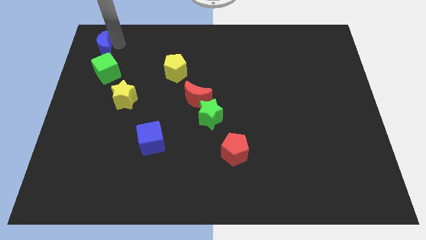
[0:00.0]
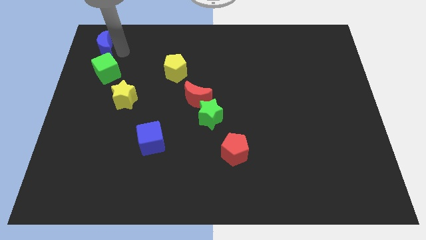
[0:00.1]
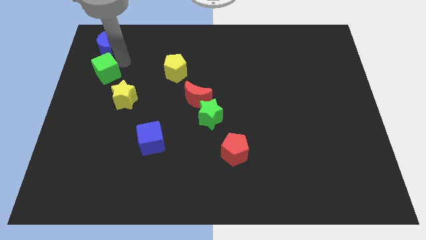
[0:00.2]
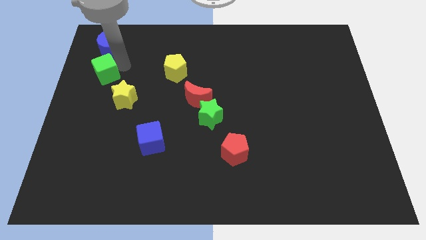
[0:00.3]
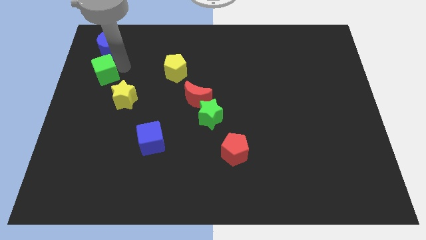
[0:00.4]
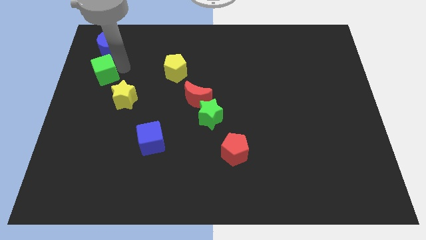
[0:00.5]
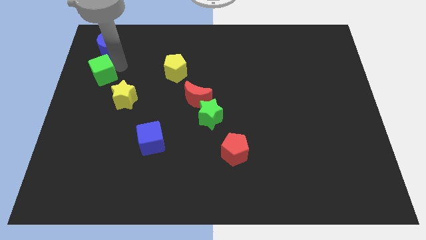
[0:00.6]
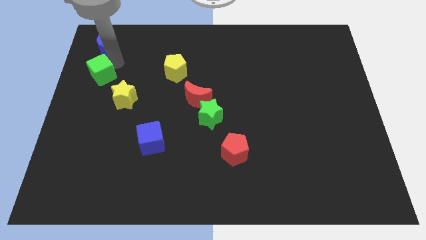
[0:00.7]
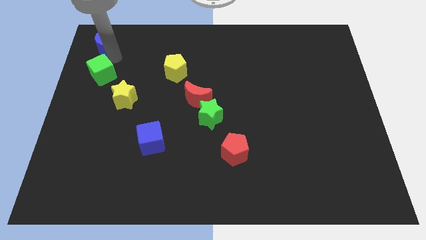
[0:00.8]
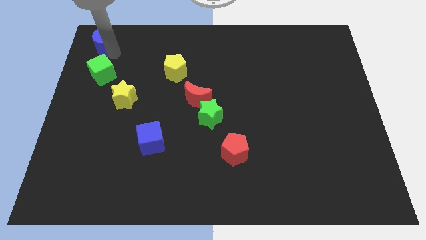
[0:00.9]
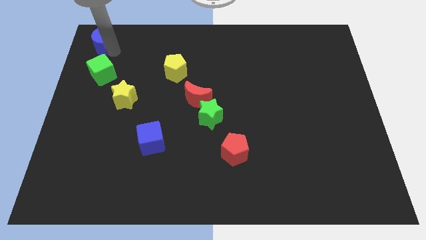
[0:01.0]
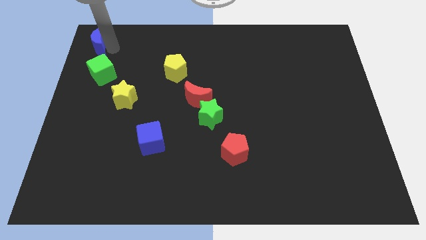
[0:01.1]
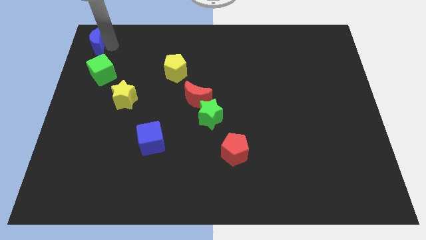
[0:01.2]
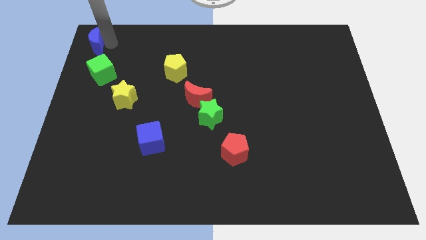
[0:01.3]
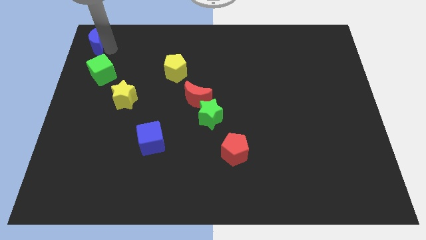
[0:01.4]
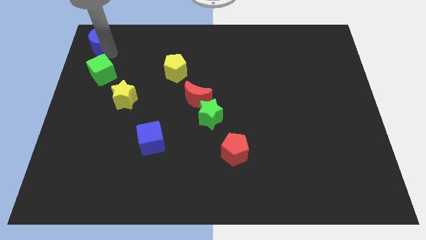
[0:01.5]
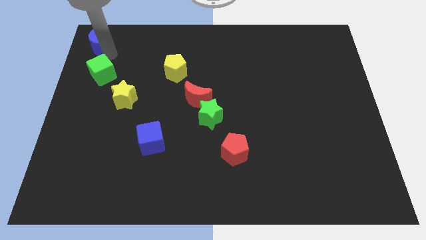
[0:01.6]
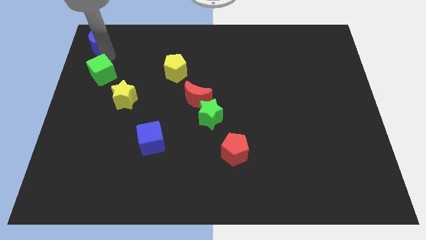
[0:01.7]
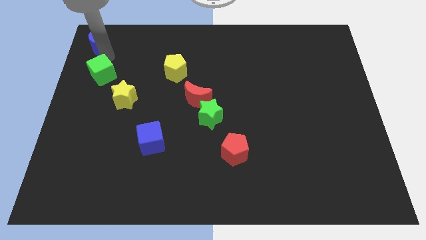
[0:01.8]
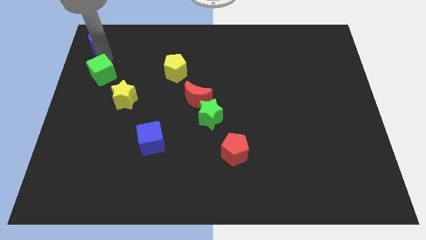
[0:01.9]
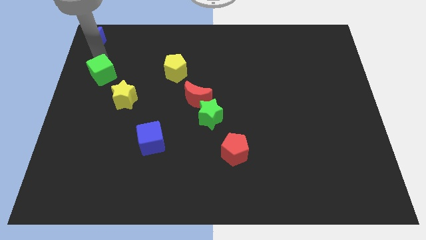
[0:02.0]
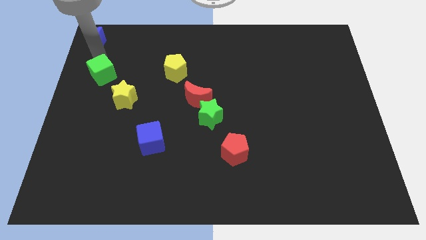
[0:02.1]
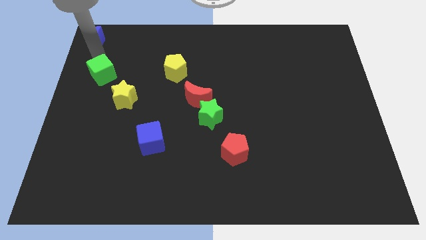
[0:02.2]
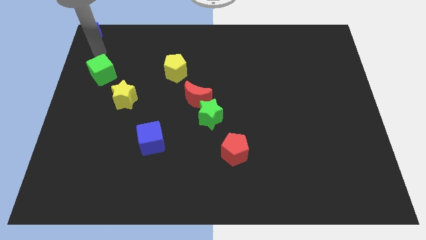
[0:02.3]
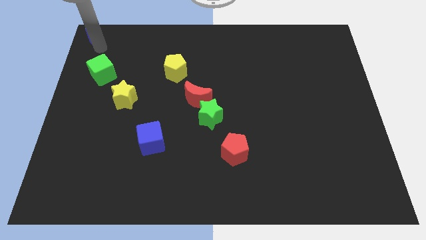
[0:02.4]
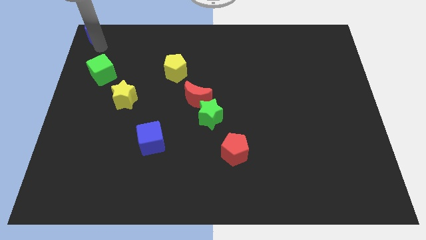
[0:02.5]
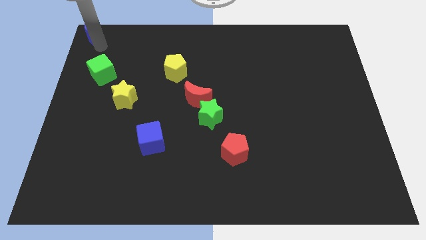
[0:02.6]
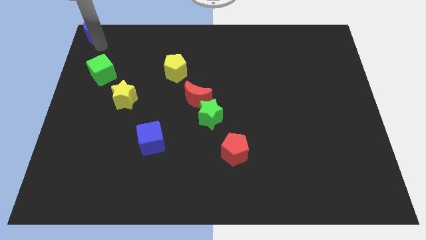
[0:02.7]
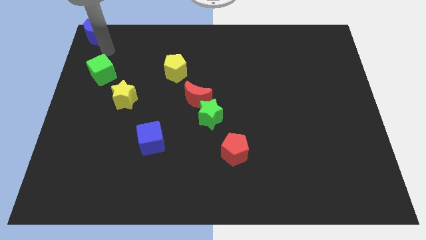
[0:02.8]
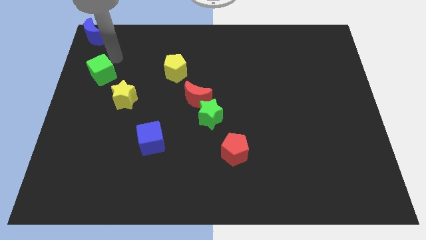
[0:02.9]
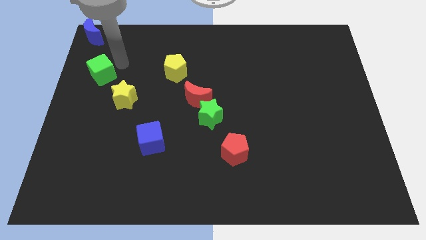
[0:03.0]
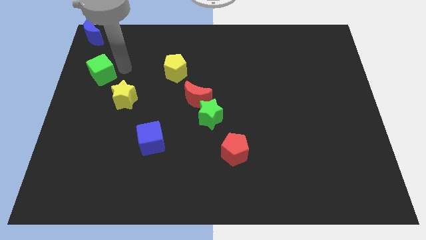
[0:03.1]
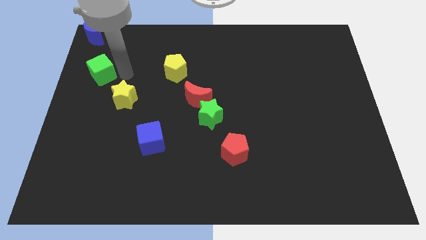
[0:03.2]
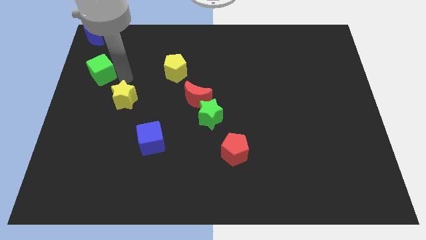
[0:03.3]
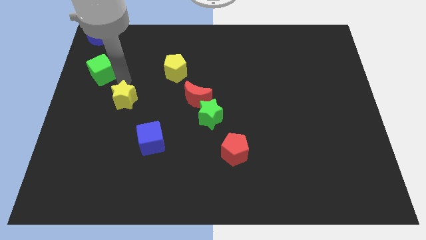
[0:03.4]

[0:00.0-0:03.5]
place the blue crescent at the top left corner of the board

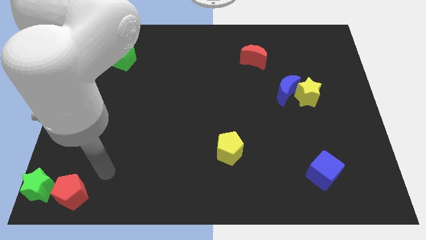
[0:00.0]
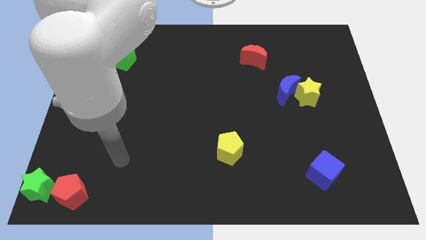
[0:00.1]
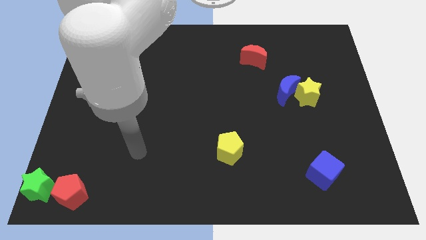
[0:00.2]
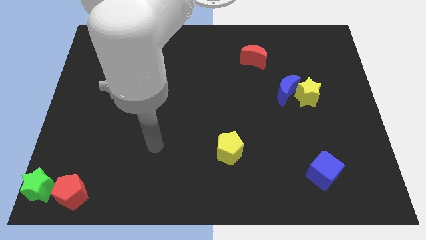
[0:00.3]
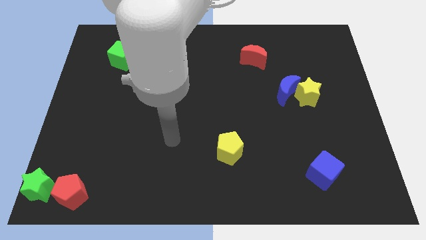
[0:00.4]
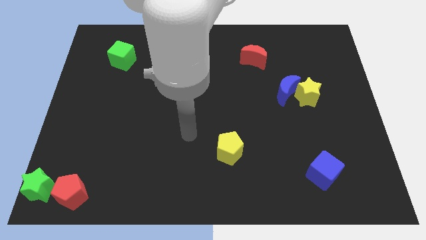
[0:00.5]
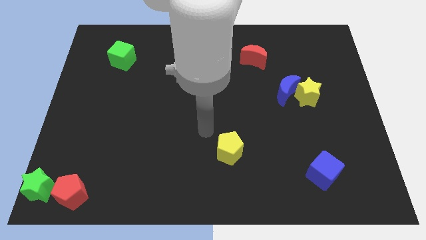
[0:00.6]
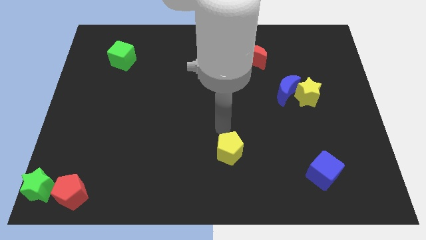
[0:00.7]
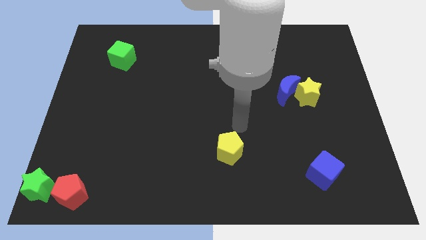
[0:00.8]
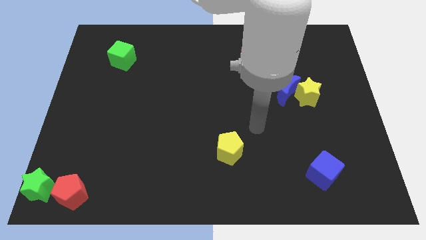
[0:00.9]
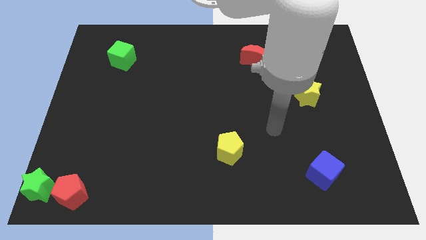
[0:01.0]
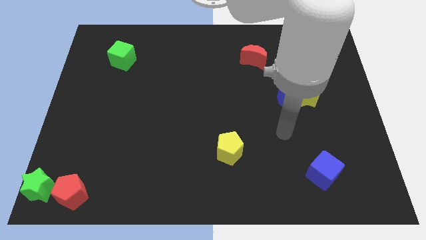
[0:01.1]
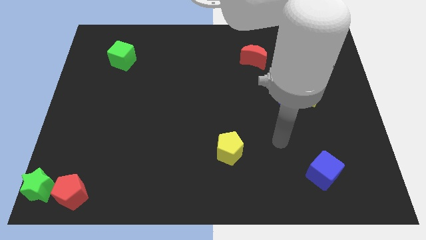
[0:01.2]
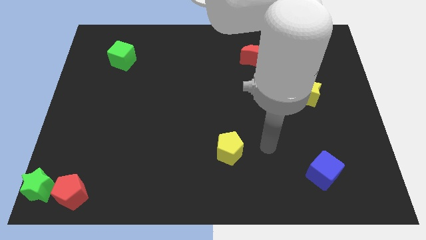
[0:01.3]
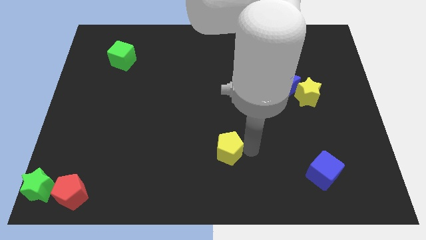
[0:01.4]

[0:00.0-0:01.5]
place your hand at right side of the yellow pentagon

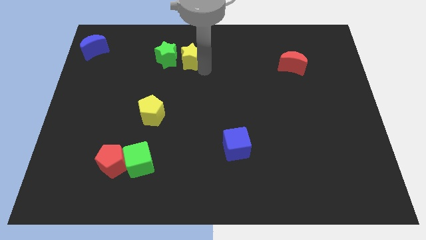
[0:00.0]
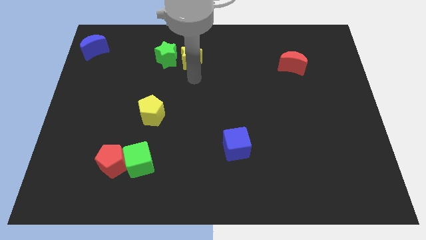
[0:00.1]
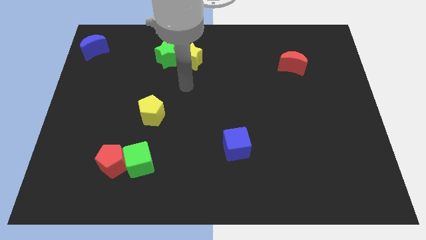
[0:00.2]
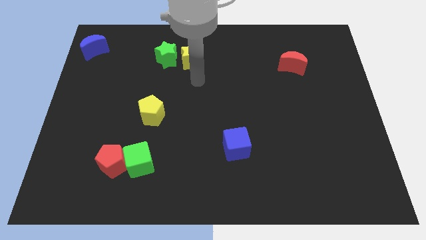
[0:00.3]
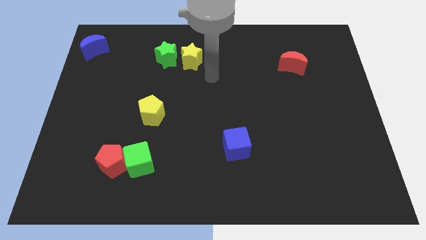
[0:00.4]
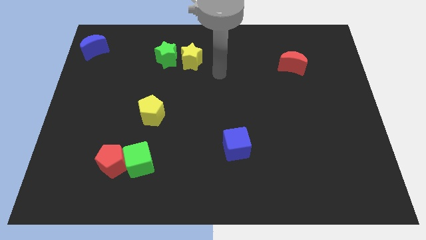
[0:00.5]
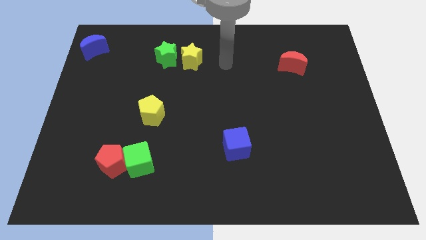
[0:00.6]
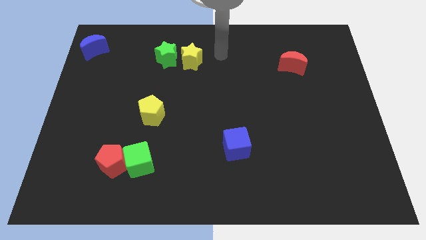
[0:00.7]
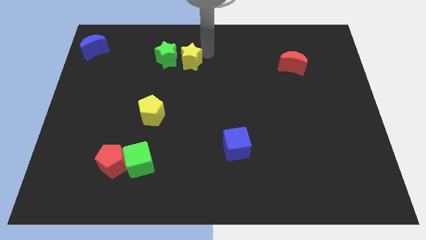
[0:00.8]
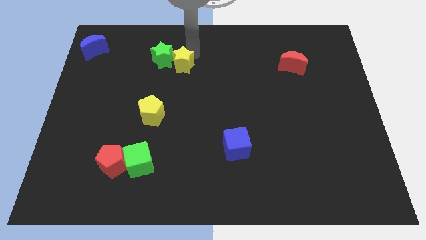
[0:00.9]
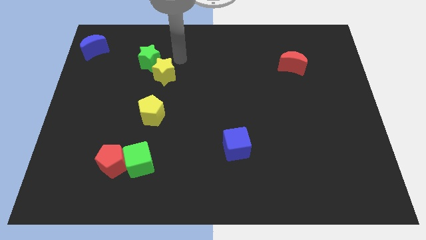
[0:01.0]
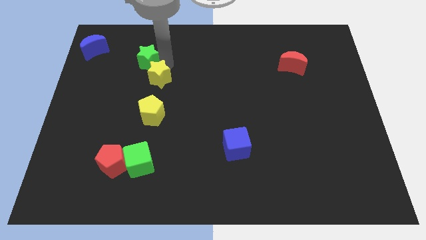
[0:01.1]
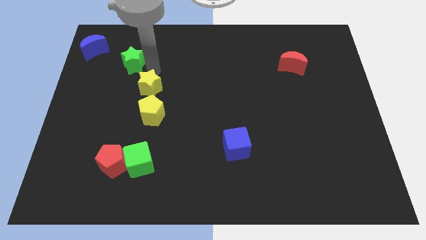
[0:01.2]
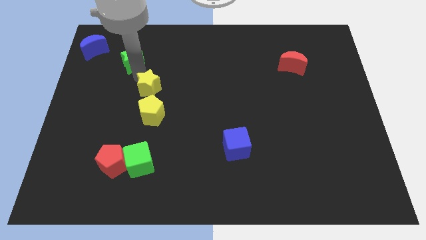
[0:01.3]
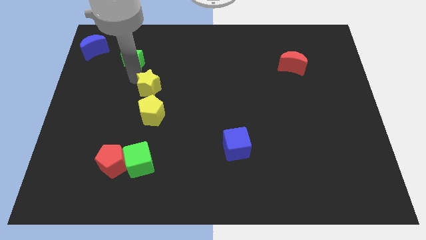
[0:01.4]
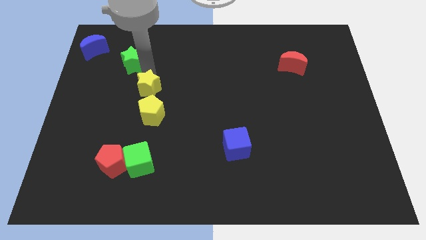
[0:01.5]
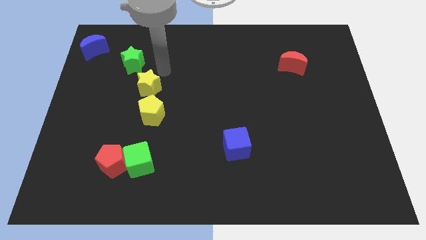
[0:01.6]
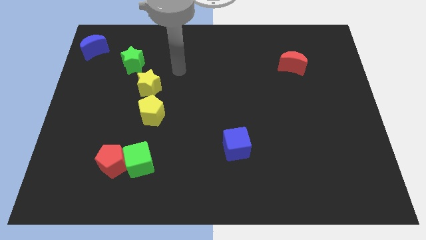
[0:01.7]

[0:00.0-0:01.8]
move the yellow star in between the green star and yellow pentagon

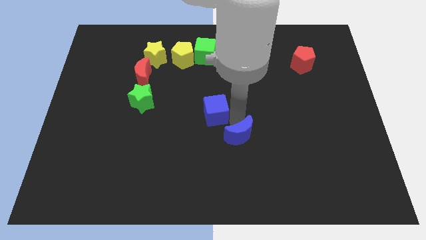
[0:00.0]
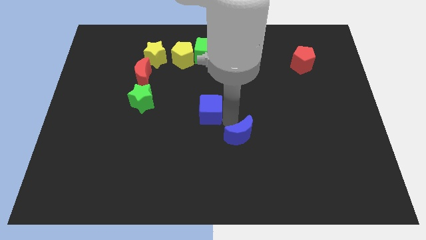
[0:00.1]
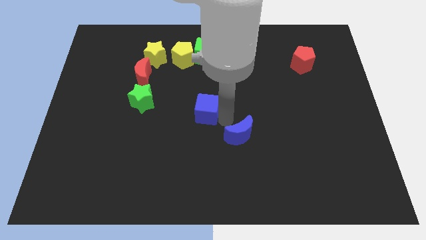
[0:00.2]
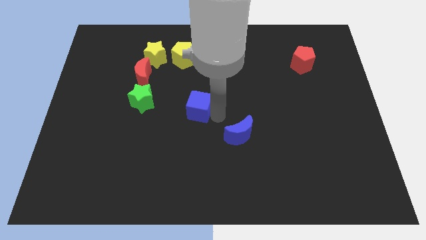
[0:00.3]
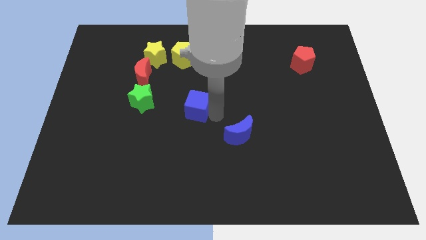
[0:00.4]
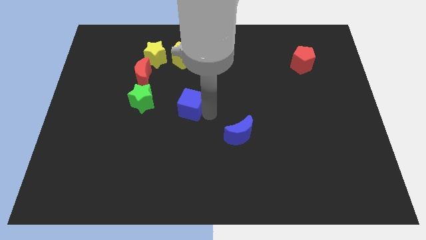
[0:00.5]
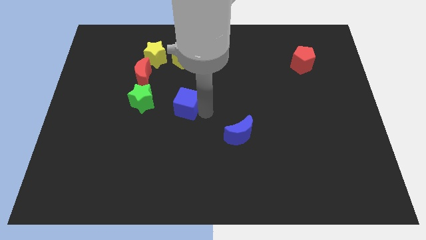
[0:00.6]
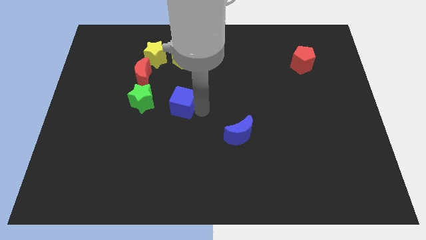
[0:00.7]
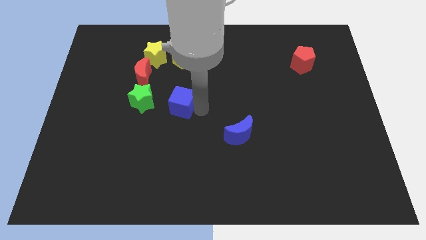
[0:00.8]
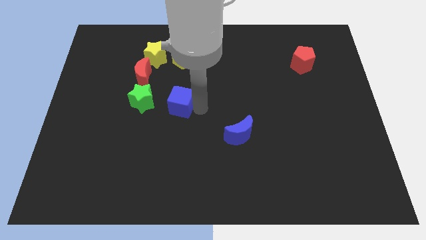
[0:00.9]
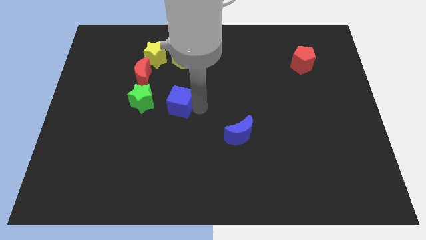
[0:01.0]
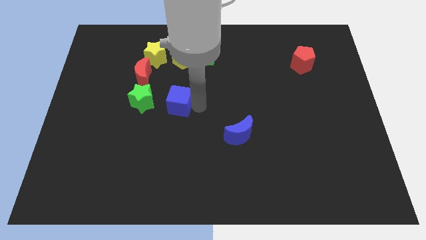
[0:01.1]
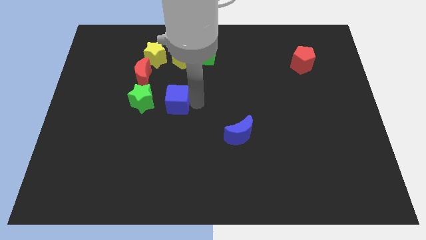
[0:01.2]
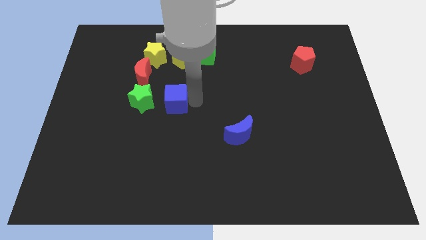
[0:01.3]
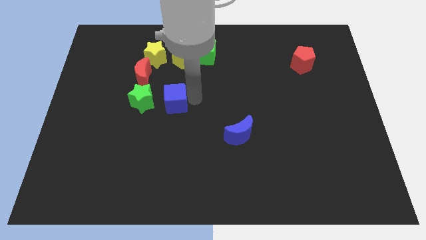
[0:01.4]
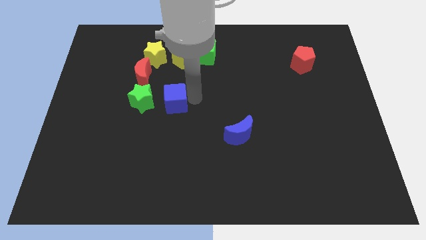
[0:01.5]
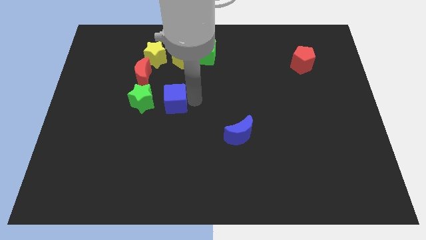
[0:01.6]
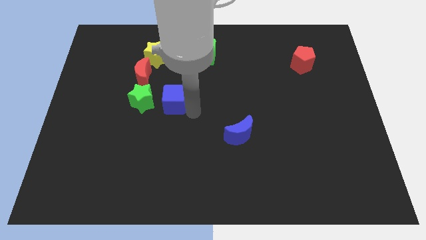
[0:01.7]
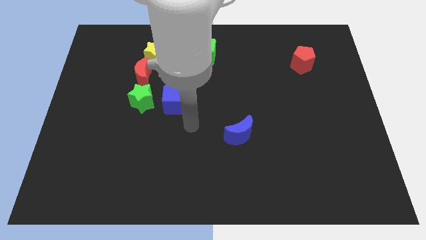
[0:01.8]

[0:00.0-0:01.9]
move the blue cube right to the green star

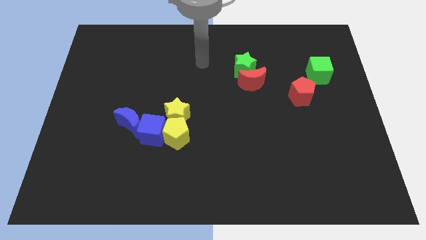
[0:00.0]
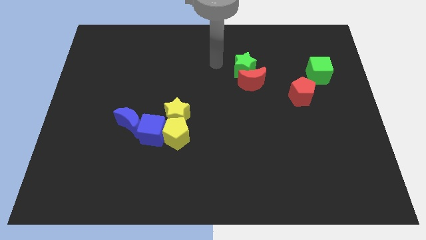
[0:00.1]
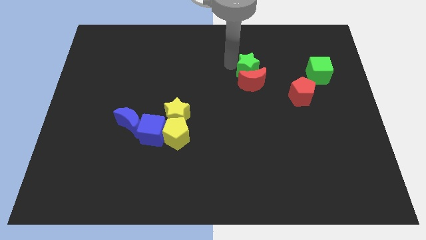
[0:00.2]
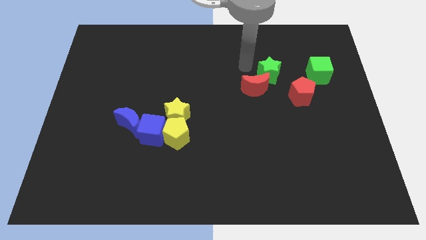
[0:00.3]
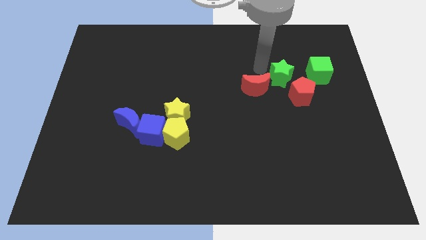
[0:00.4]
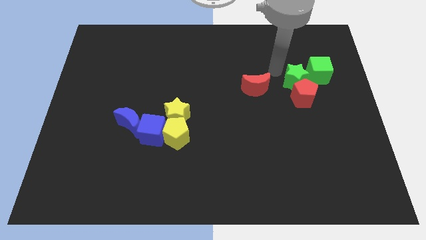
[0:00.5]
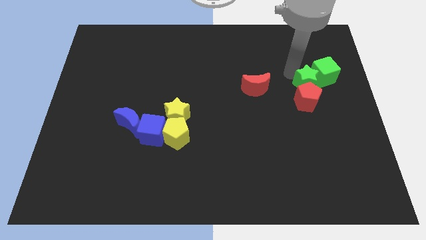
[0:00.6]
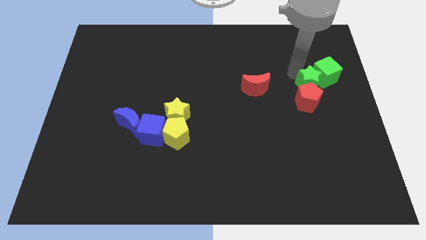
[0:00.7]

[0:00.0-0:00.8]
move the green star above the red pentagon
